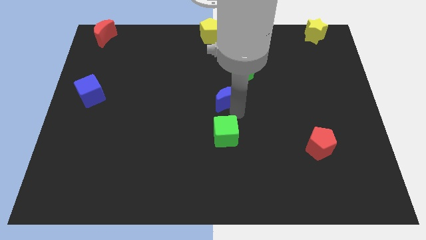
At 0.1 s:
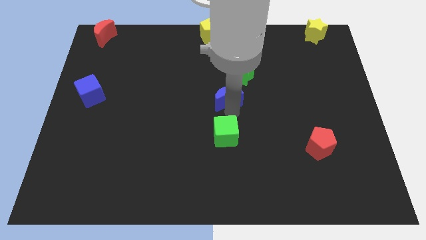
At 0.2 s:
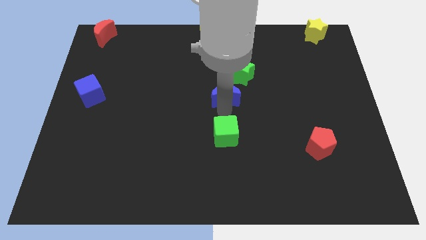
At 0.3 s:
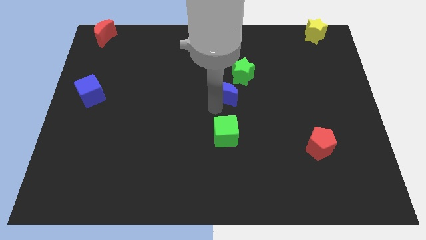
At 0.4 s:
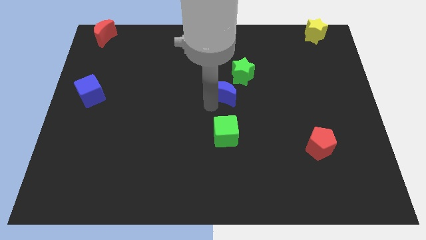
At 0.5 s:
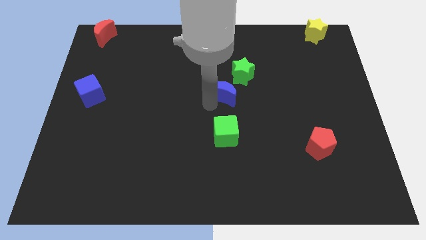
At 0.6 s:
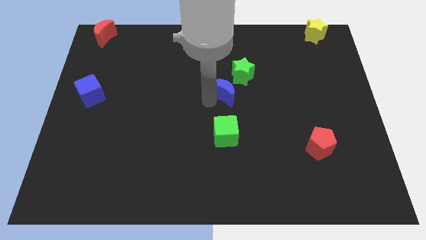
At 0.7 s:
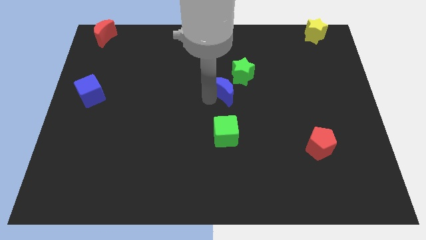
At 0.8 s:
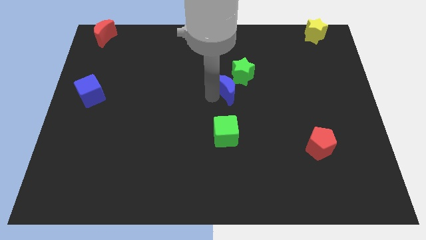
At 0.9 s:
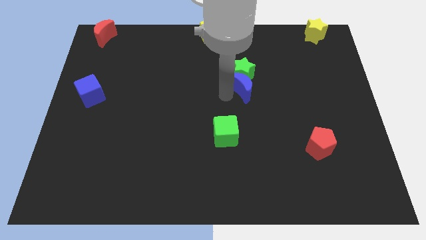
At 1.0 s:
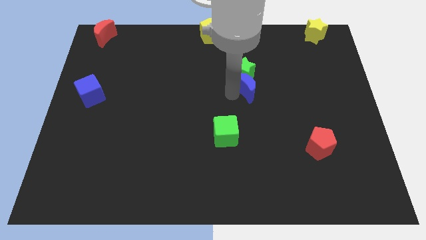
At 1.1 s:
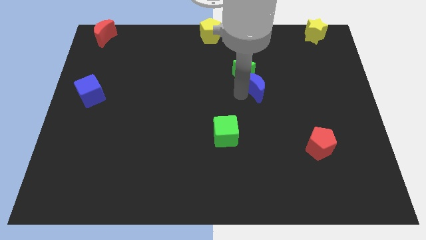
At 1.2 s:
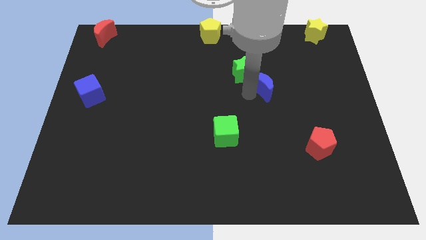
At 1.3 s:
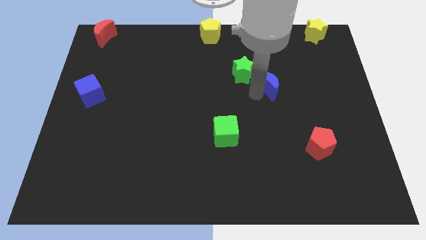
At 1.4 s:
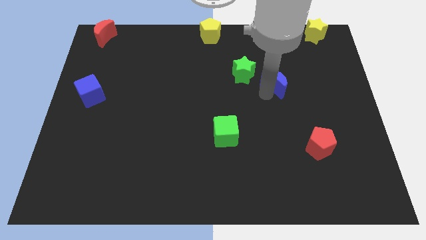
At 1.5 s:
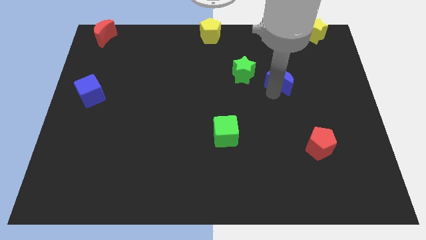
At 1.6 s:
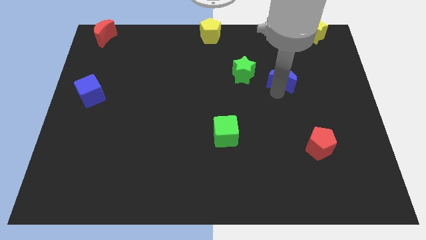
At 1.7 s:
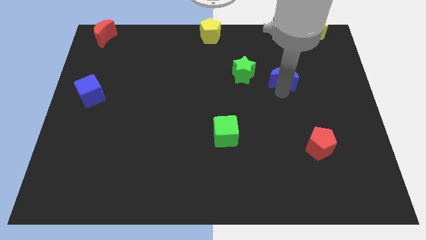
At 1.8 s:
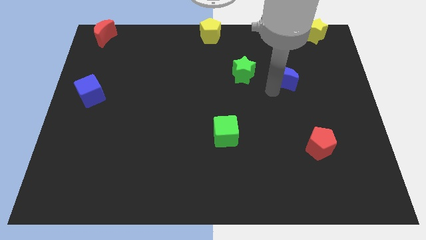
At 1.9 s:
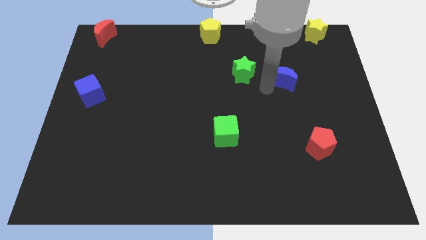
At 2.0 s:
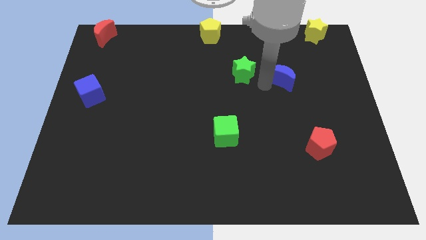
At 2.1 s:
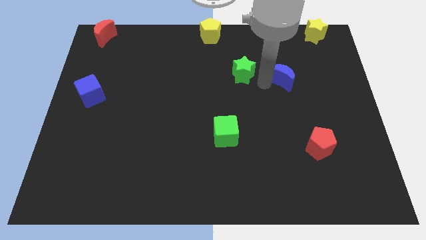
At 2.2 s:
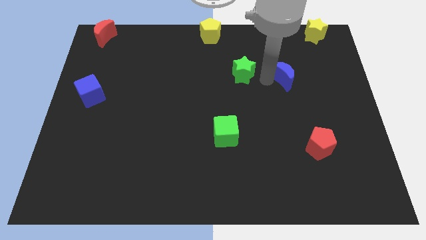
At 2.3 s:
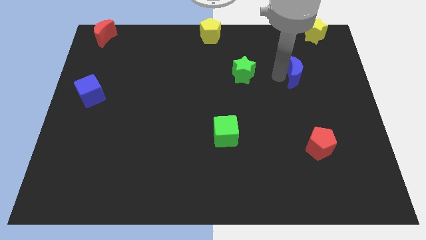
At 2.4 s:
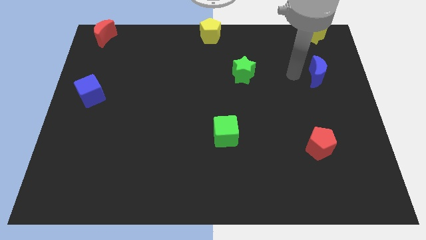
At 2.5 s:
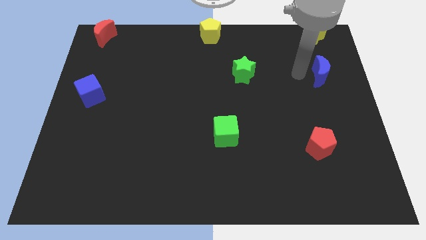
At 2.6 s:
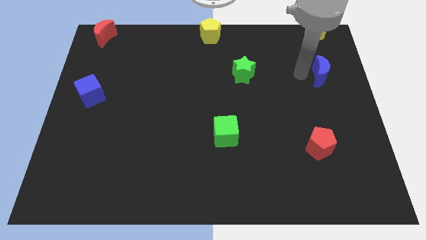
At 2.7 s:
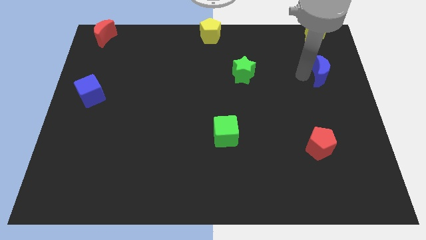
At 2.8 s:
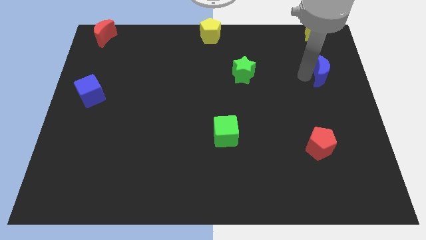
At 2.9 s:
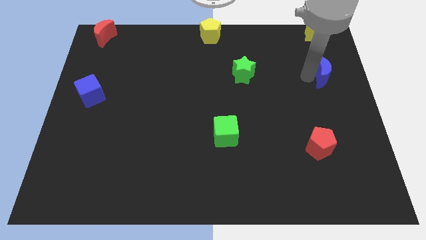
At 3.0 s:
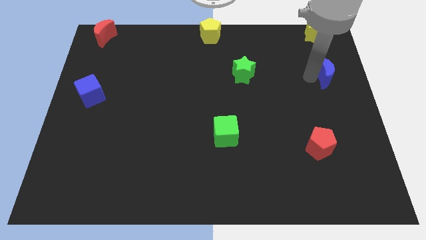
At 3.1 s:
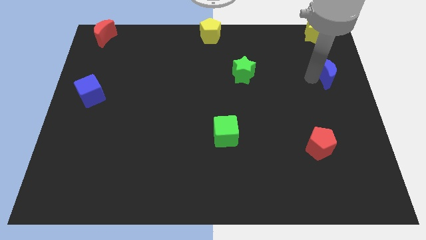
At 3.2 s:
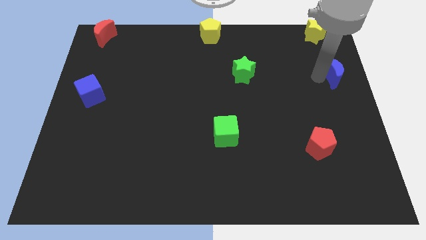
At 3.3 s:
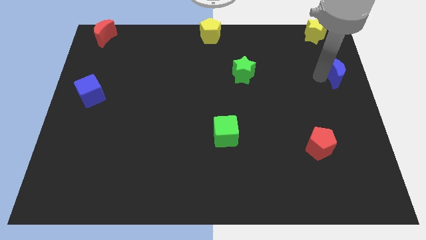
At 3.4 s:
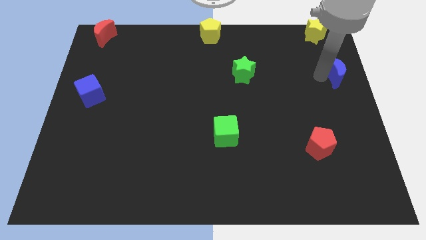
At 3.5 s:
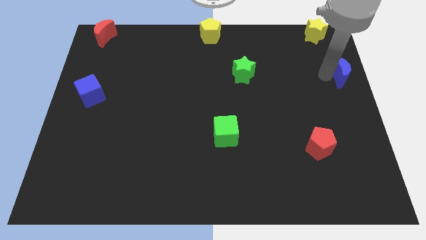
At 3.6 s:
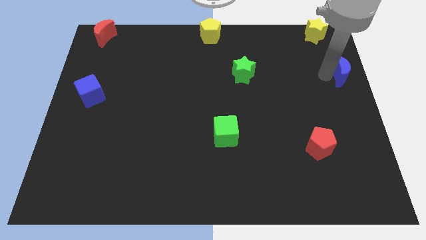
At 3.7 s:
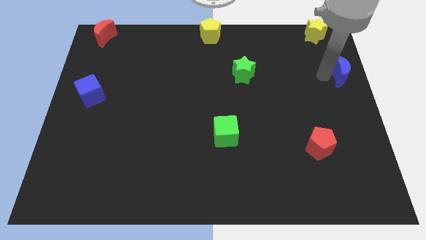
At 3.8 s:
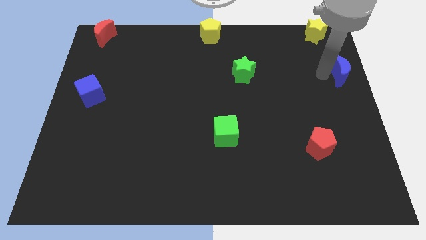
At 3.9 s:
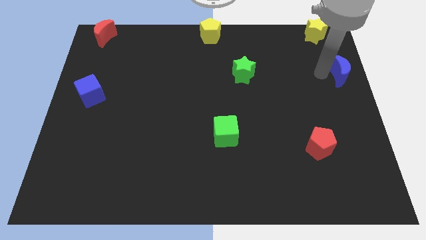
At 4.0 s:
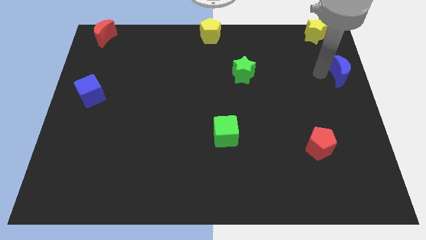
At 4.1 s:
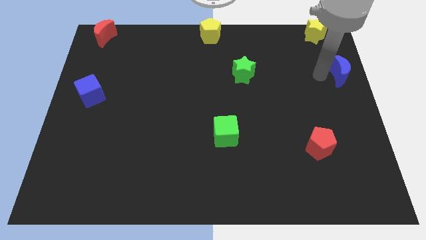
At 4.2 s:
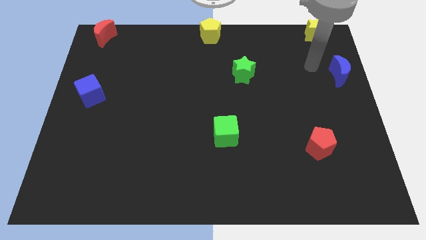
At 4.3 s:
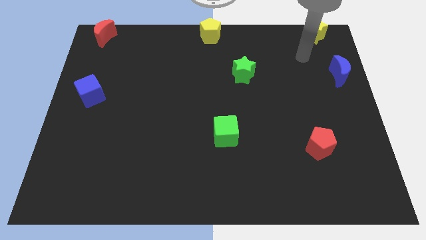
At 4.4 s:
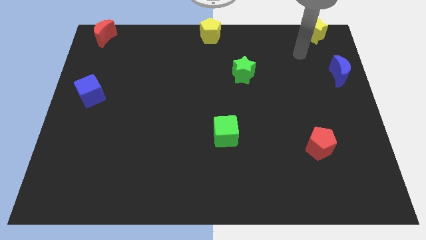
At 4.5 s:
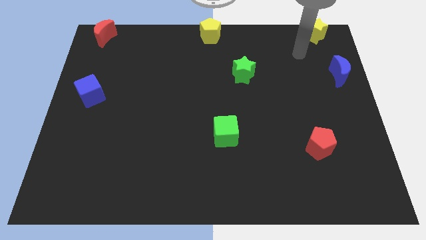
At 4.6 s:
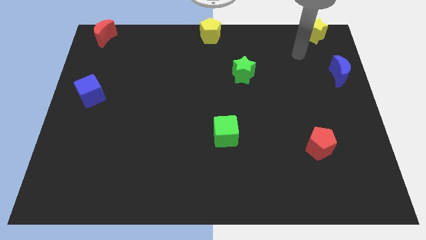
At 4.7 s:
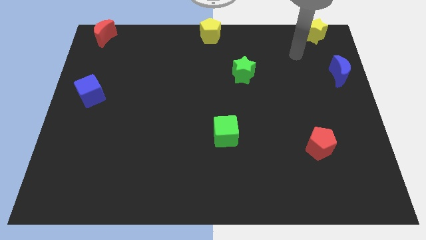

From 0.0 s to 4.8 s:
move the blue moon towards the right side of the board

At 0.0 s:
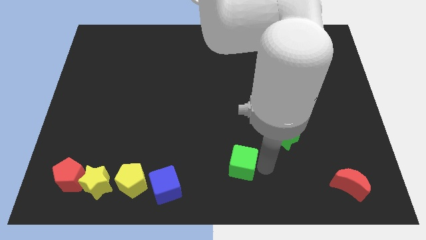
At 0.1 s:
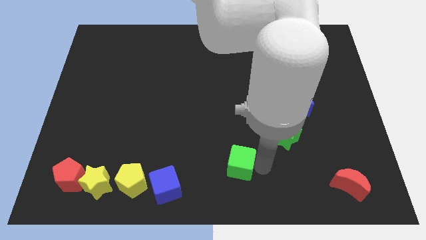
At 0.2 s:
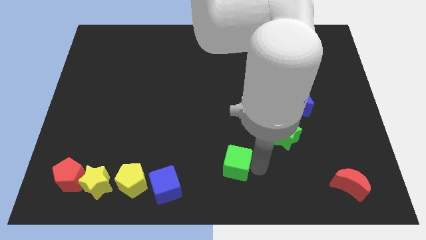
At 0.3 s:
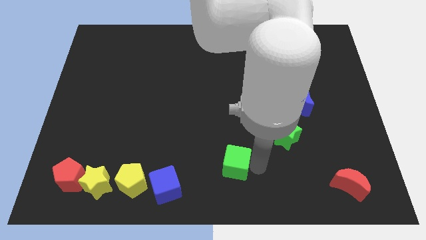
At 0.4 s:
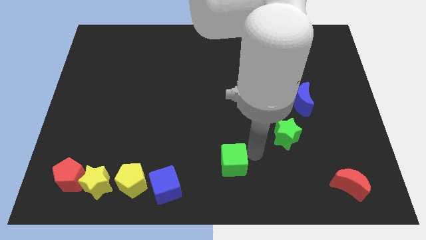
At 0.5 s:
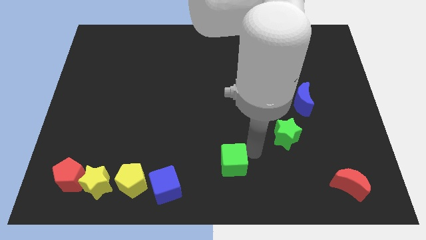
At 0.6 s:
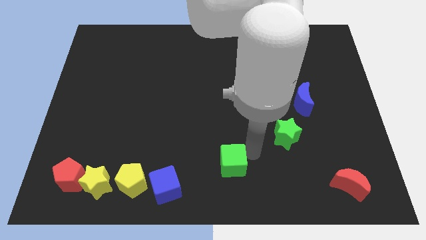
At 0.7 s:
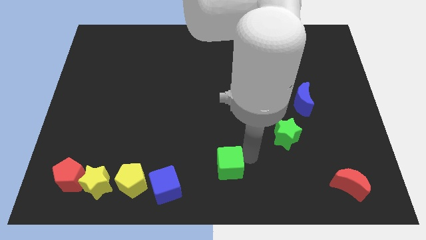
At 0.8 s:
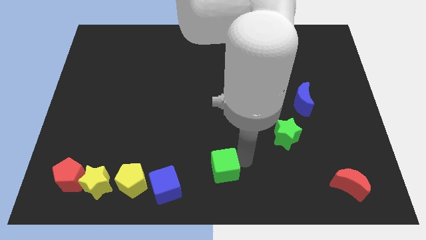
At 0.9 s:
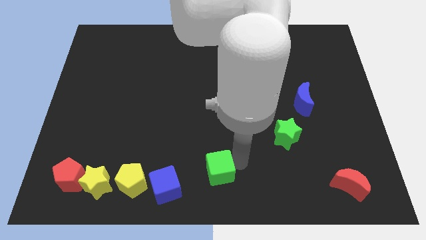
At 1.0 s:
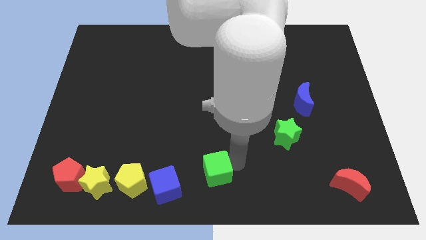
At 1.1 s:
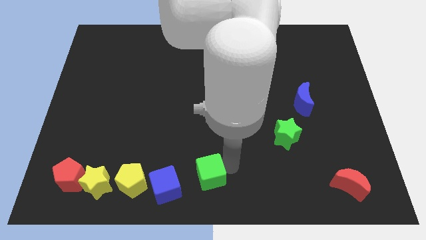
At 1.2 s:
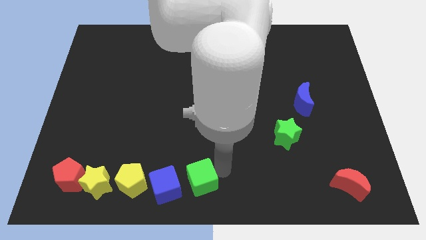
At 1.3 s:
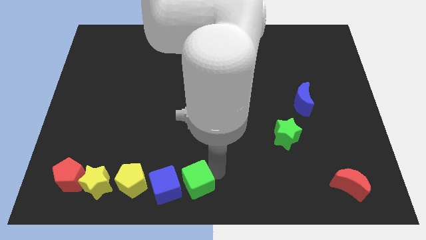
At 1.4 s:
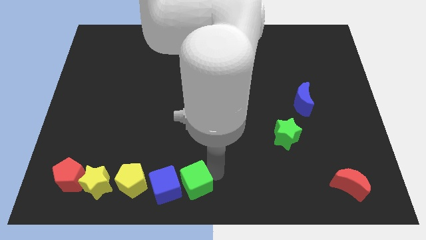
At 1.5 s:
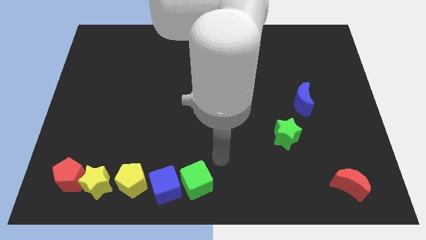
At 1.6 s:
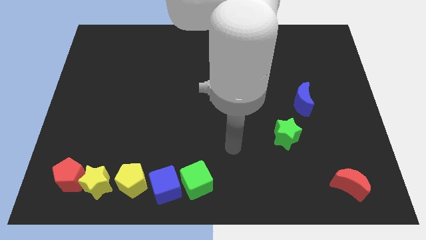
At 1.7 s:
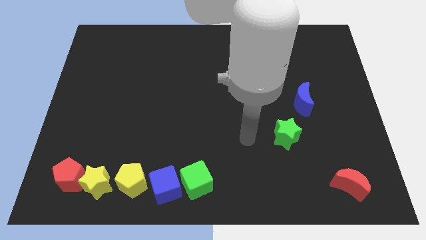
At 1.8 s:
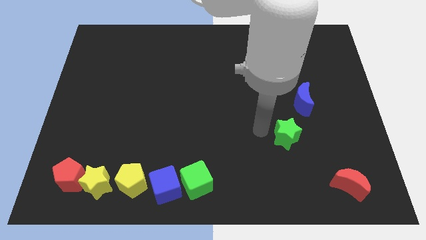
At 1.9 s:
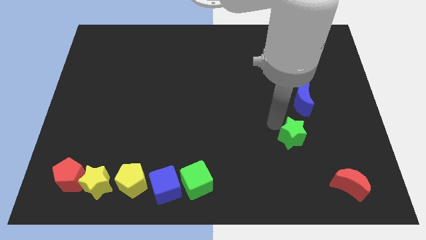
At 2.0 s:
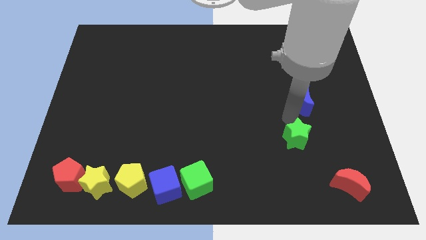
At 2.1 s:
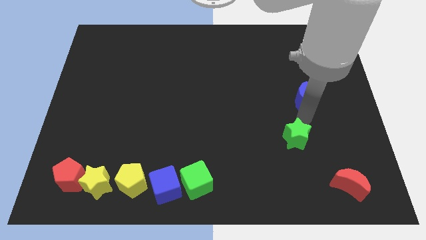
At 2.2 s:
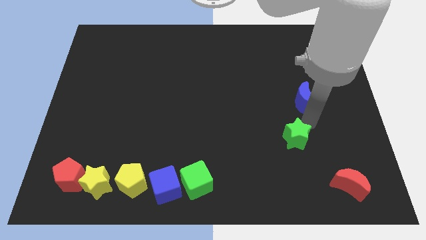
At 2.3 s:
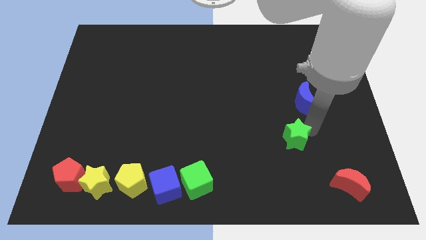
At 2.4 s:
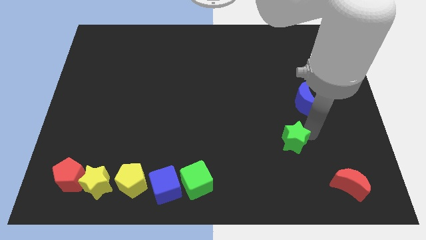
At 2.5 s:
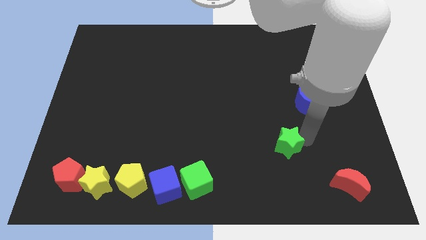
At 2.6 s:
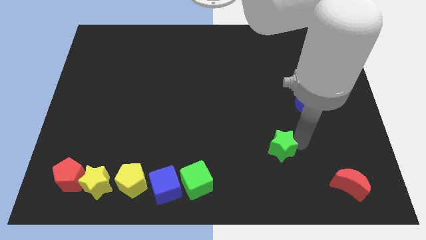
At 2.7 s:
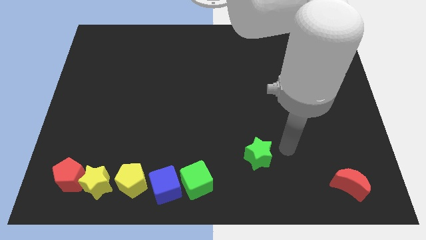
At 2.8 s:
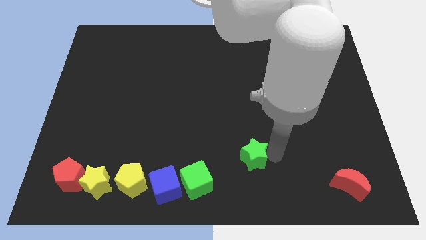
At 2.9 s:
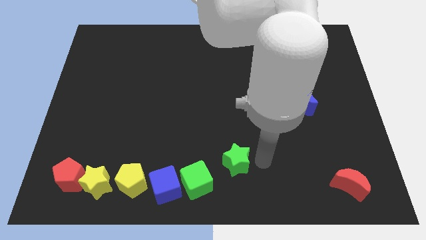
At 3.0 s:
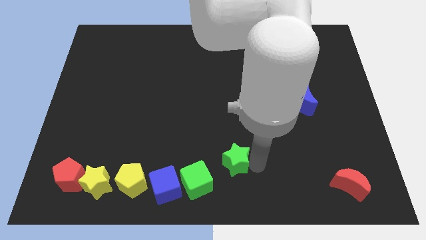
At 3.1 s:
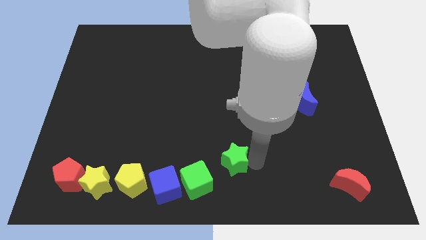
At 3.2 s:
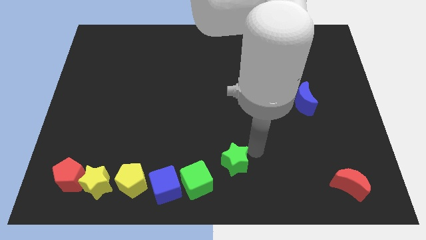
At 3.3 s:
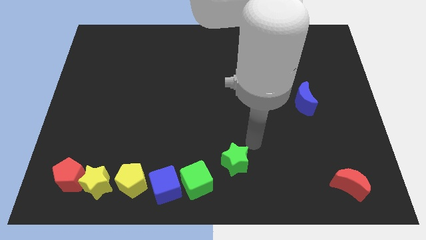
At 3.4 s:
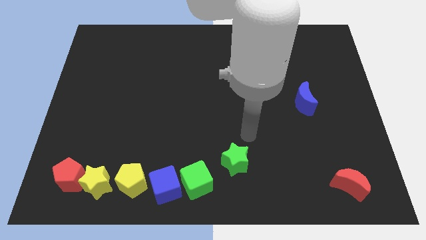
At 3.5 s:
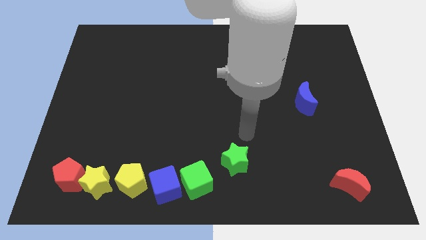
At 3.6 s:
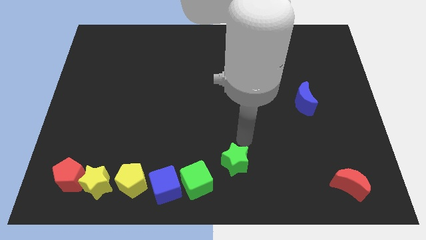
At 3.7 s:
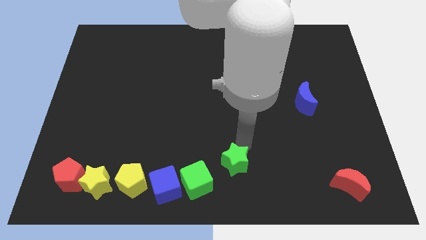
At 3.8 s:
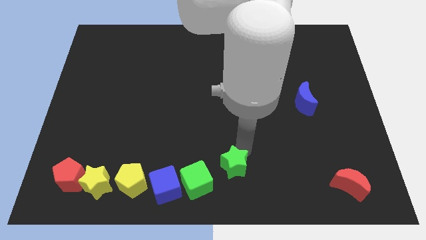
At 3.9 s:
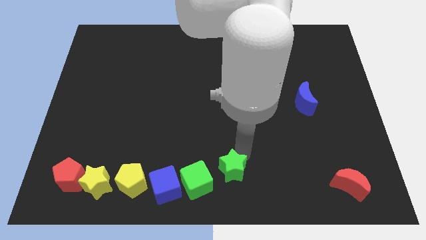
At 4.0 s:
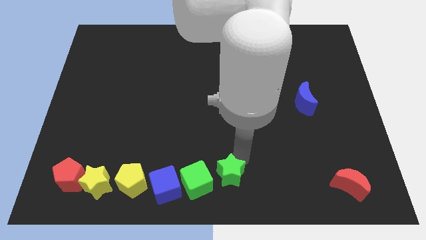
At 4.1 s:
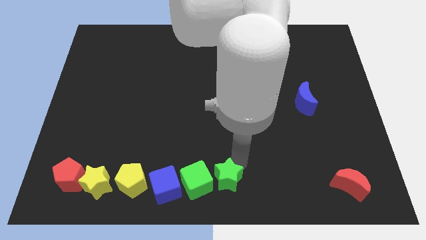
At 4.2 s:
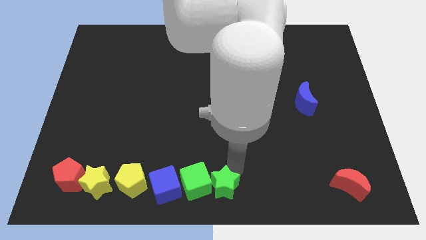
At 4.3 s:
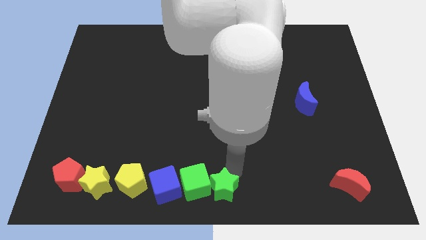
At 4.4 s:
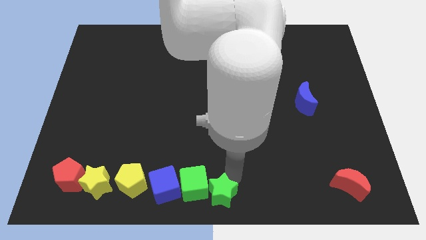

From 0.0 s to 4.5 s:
push the green blocks to the right side of the blue cube
